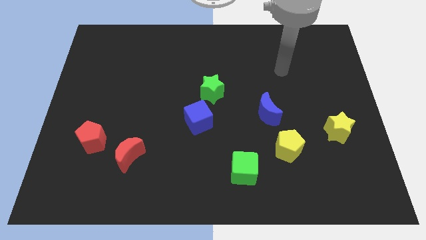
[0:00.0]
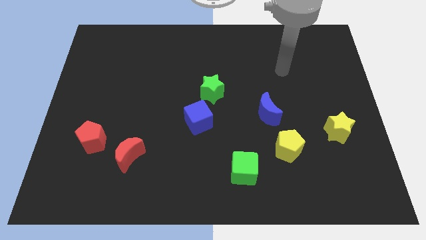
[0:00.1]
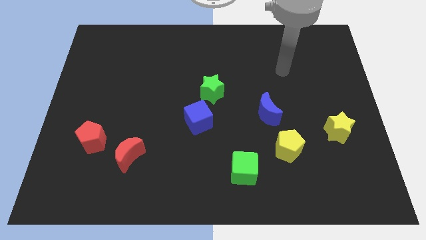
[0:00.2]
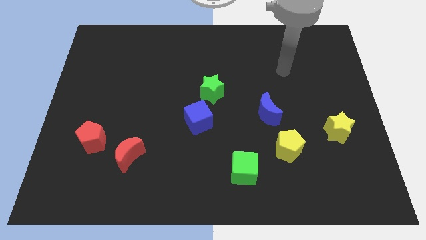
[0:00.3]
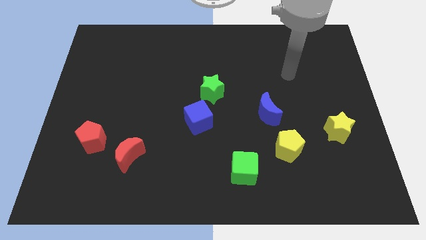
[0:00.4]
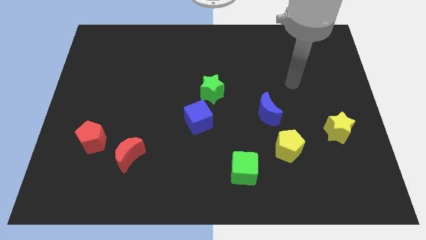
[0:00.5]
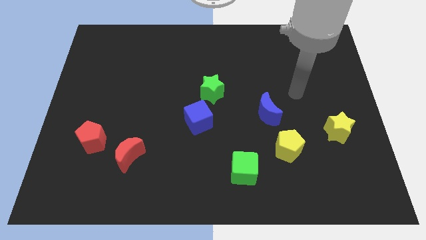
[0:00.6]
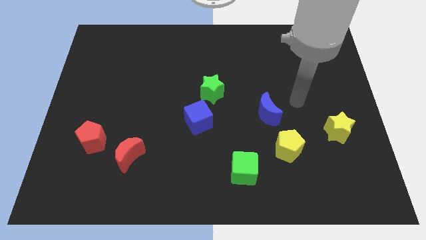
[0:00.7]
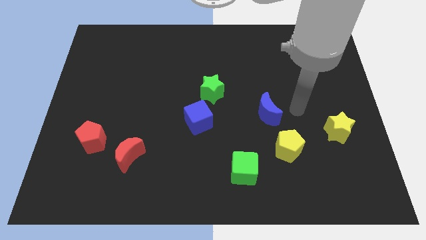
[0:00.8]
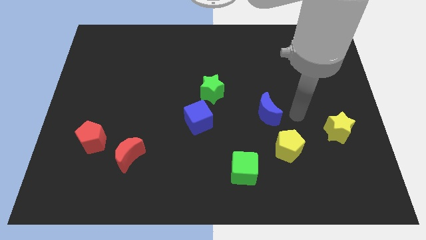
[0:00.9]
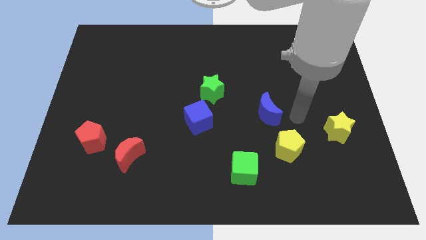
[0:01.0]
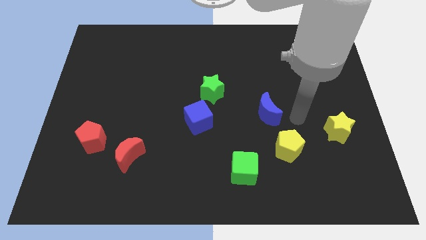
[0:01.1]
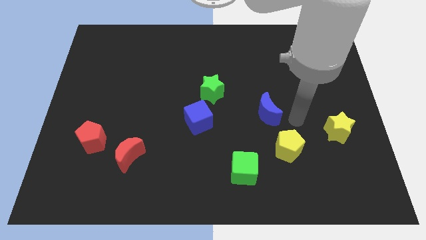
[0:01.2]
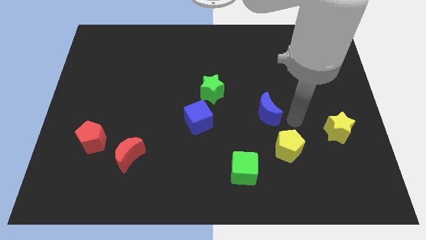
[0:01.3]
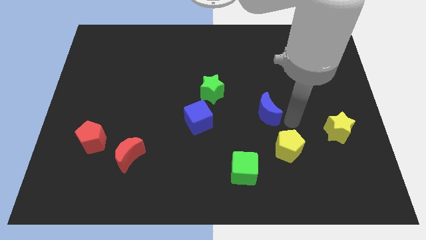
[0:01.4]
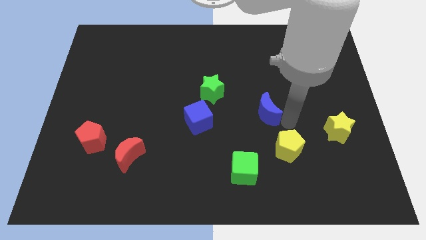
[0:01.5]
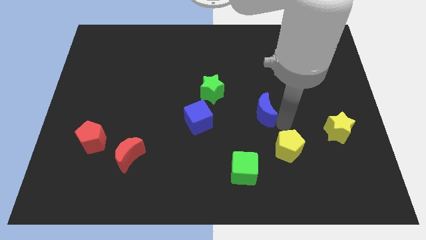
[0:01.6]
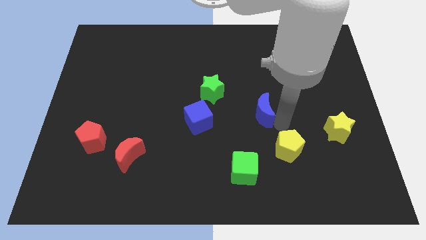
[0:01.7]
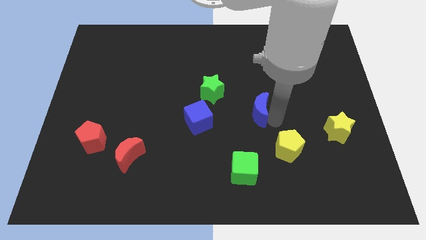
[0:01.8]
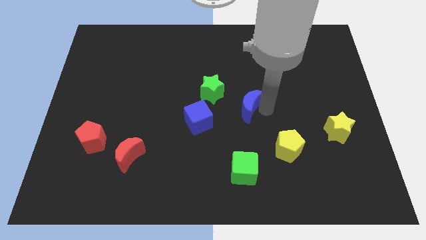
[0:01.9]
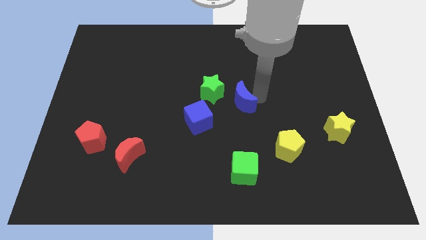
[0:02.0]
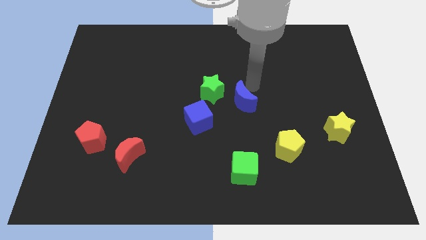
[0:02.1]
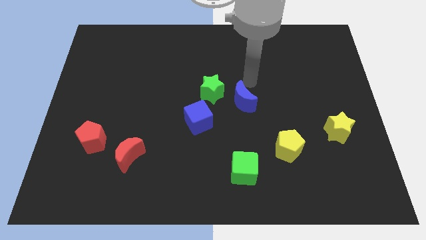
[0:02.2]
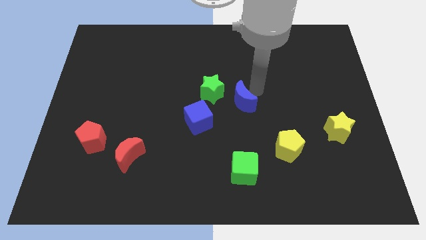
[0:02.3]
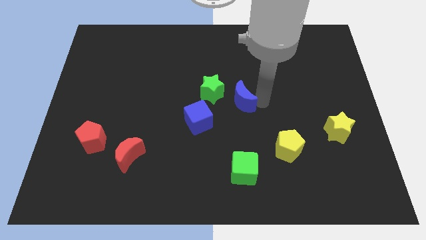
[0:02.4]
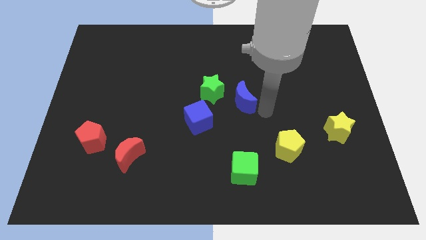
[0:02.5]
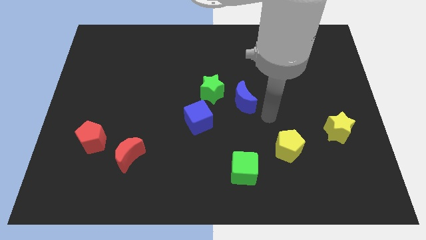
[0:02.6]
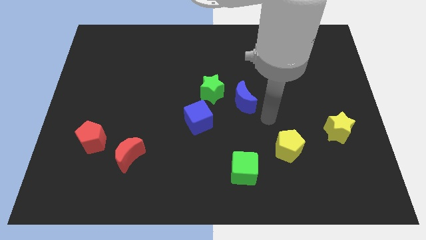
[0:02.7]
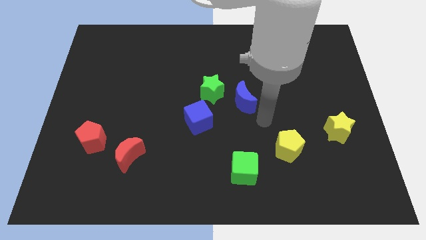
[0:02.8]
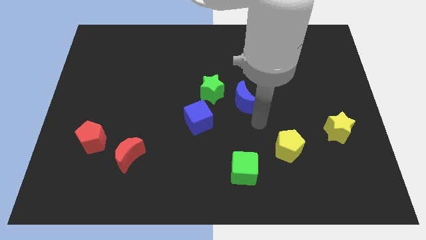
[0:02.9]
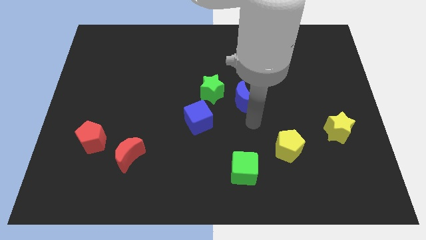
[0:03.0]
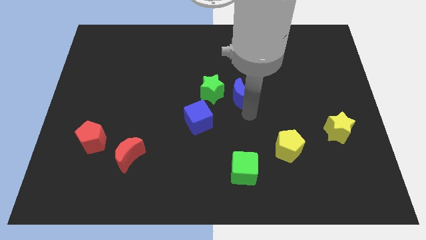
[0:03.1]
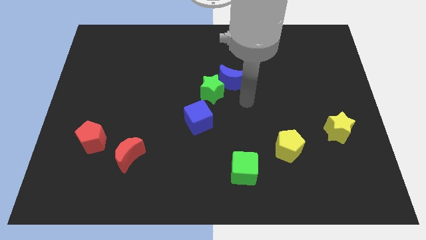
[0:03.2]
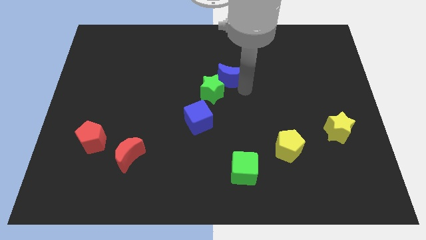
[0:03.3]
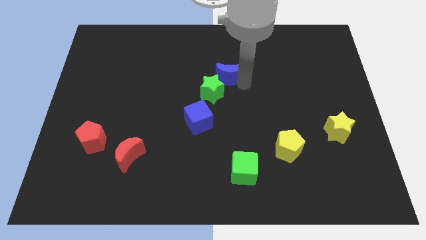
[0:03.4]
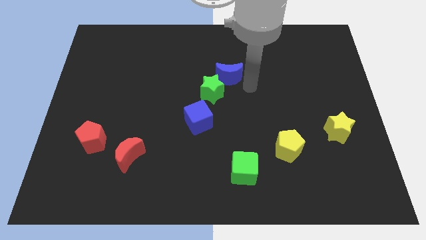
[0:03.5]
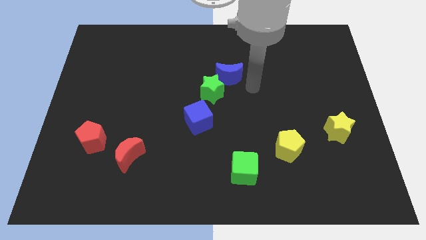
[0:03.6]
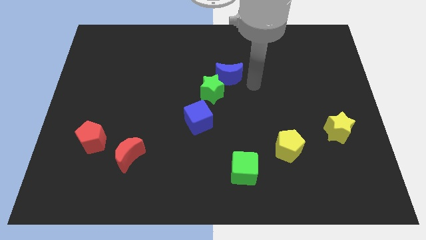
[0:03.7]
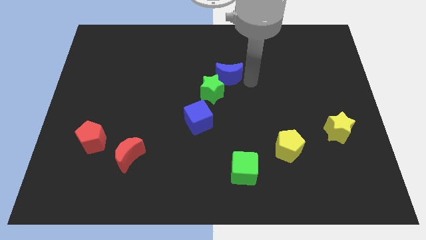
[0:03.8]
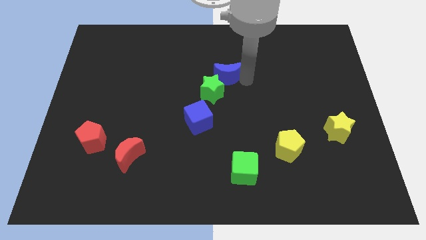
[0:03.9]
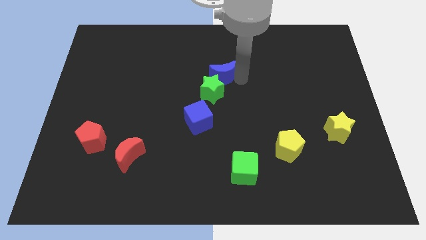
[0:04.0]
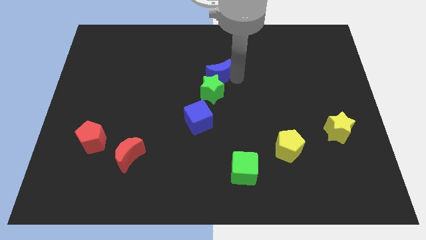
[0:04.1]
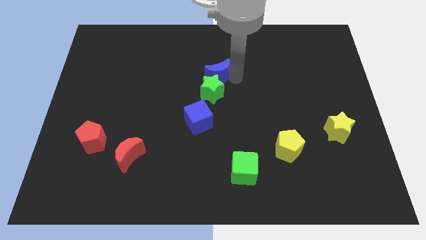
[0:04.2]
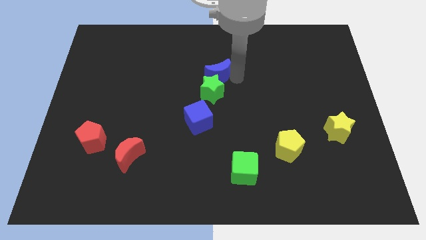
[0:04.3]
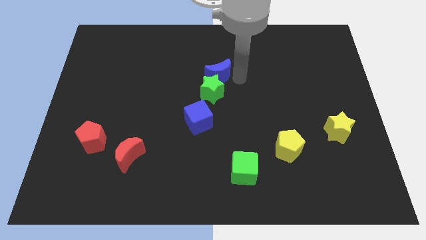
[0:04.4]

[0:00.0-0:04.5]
push the blue crescent to the top of green star

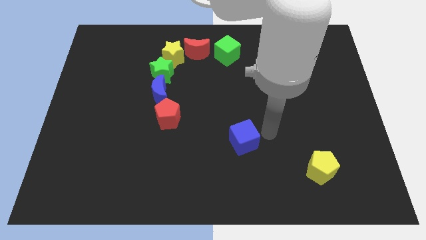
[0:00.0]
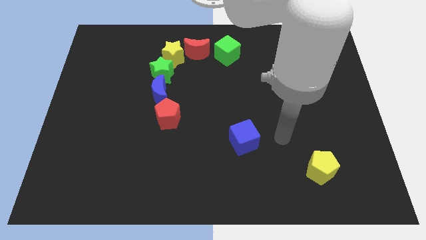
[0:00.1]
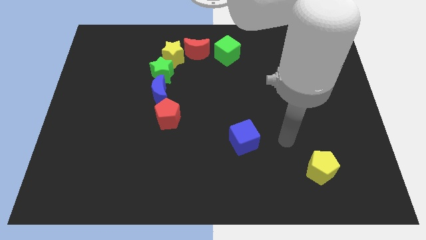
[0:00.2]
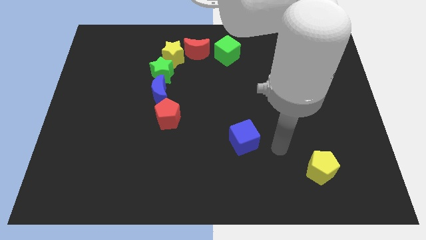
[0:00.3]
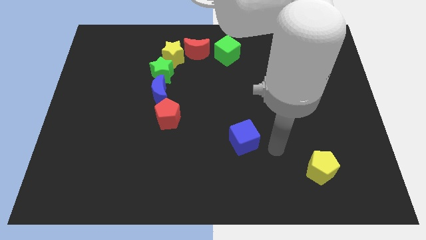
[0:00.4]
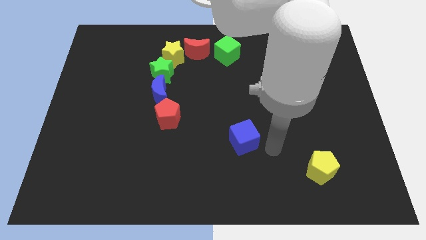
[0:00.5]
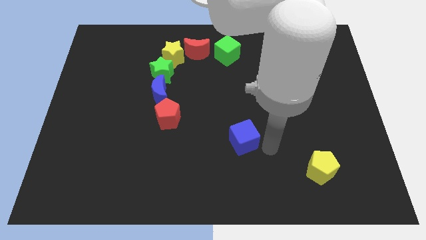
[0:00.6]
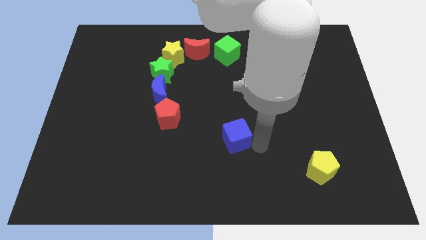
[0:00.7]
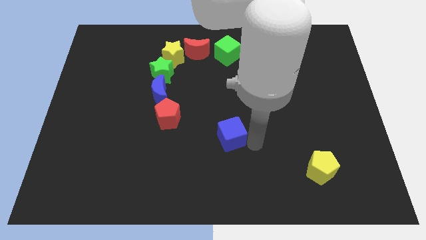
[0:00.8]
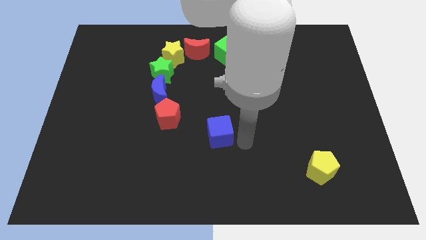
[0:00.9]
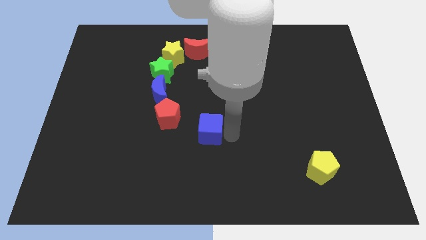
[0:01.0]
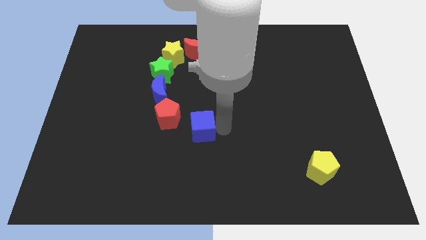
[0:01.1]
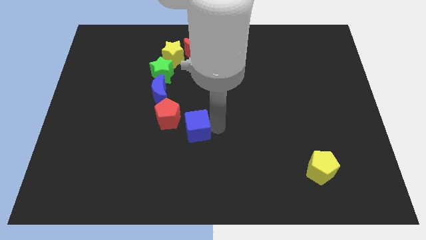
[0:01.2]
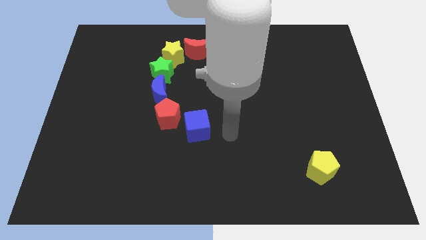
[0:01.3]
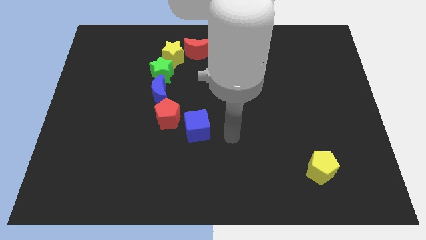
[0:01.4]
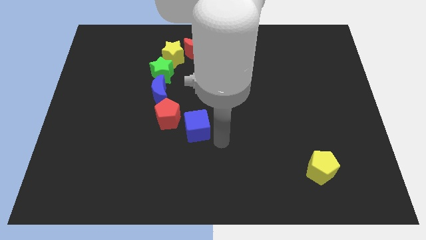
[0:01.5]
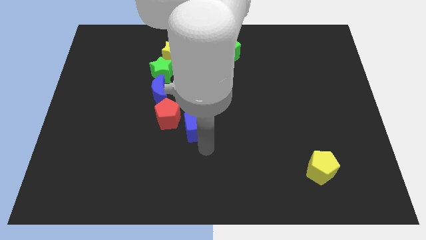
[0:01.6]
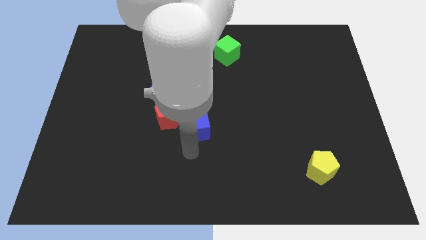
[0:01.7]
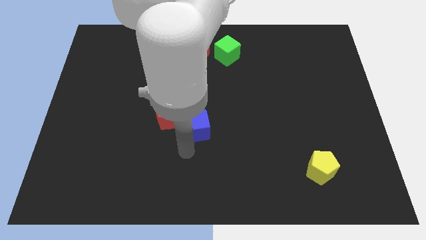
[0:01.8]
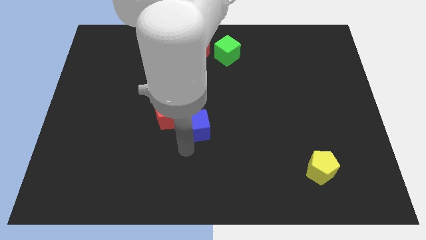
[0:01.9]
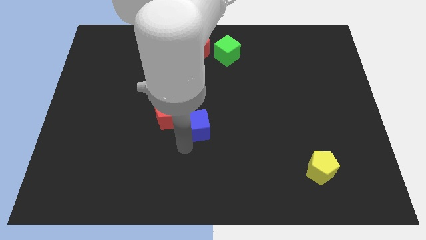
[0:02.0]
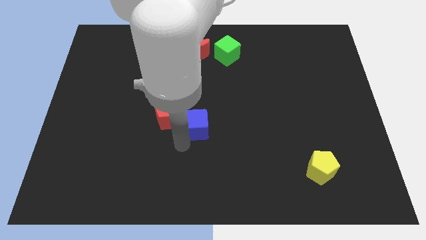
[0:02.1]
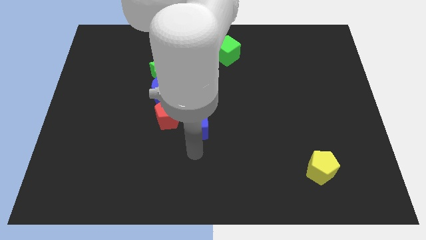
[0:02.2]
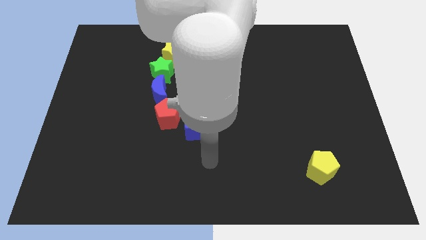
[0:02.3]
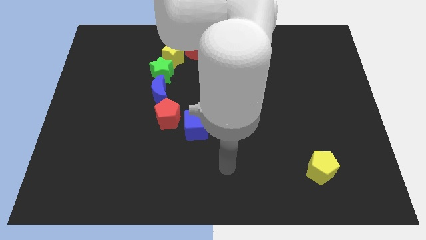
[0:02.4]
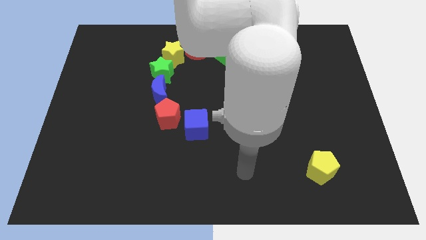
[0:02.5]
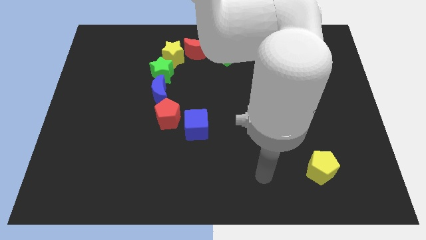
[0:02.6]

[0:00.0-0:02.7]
push the blue cube close to the red pentagon

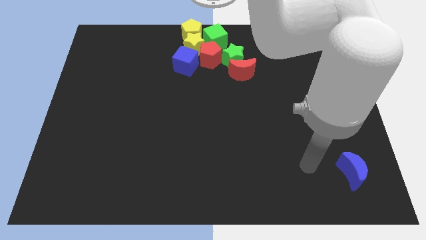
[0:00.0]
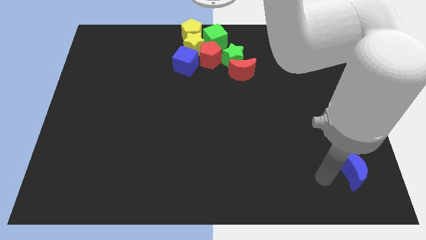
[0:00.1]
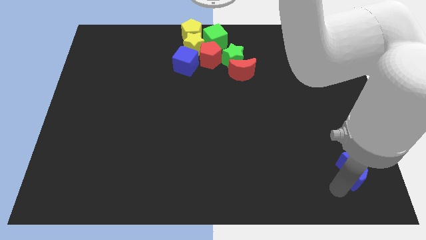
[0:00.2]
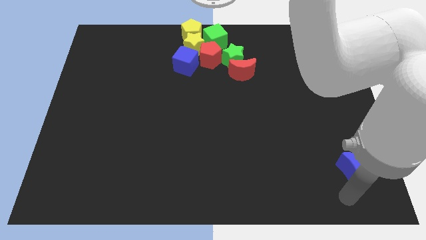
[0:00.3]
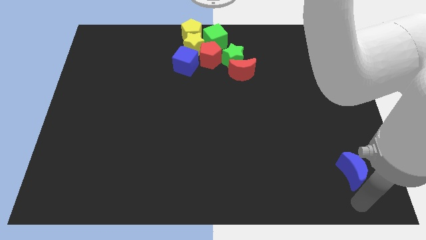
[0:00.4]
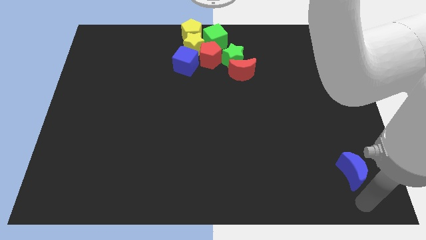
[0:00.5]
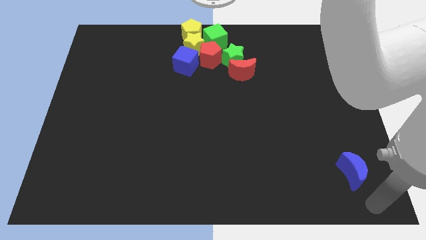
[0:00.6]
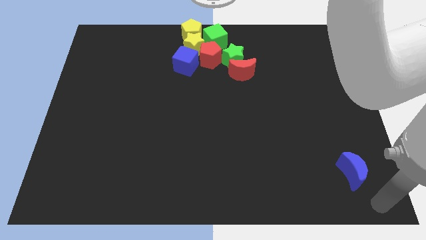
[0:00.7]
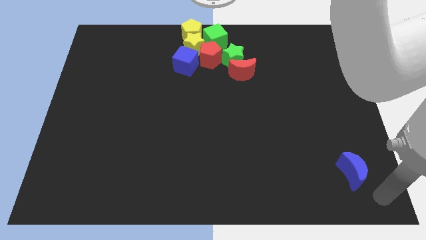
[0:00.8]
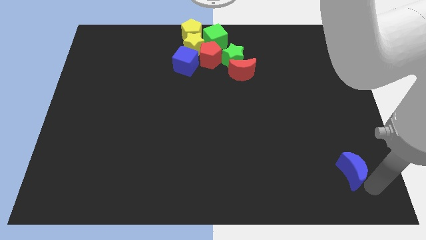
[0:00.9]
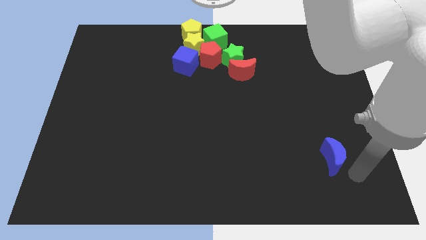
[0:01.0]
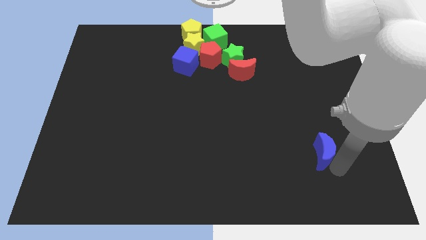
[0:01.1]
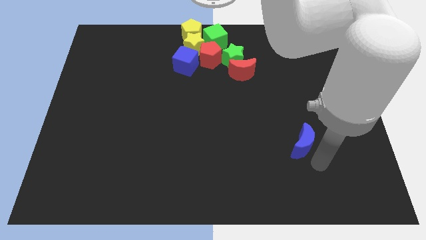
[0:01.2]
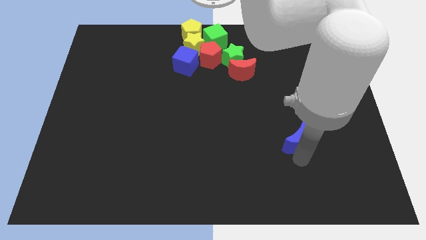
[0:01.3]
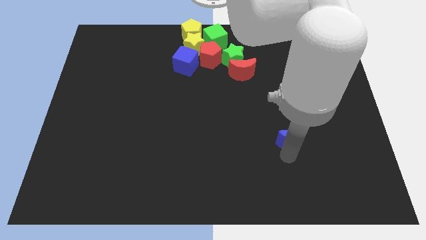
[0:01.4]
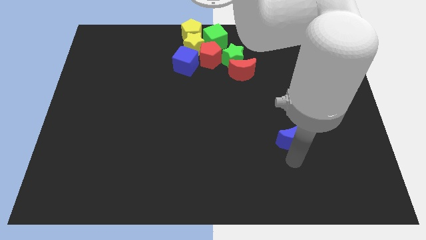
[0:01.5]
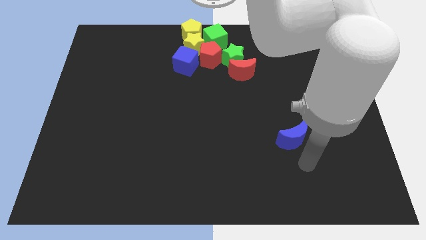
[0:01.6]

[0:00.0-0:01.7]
move the blue crescent towards the center of the board
